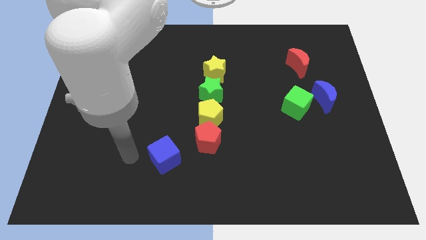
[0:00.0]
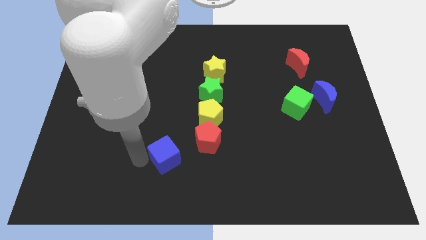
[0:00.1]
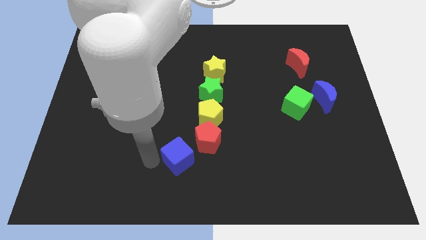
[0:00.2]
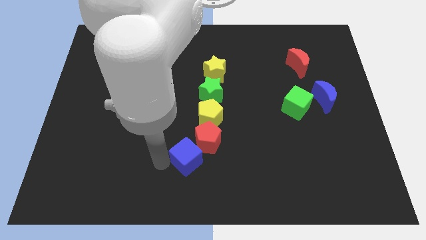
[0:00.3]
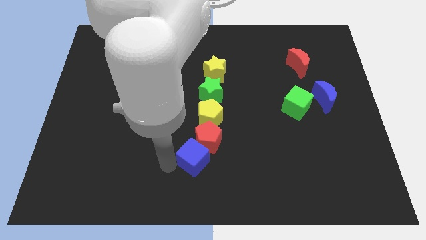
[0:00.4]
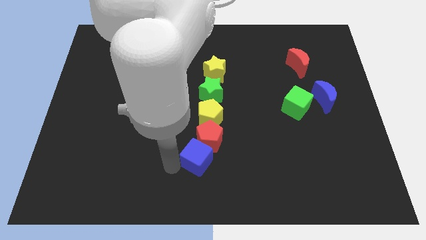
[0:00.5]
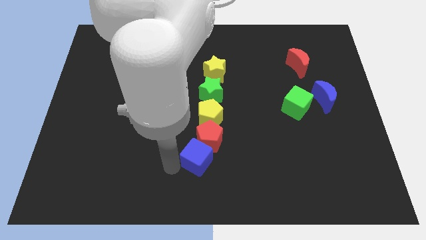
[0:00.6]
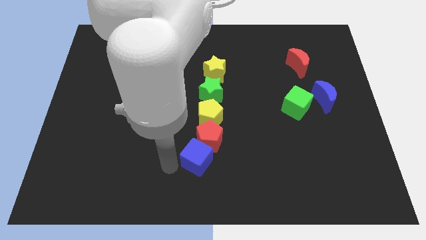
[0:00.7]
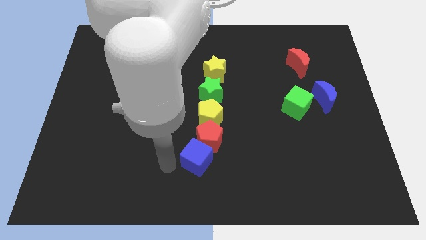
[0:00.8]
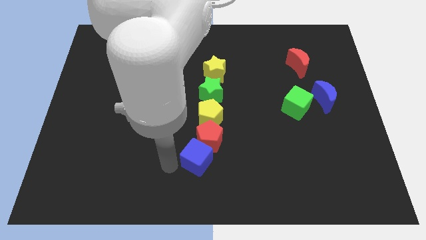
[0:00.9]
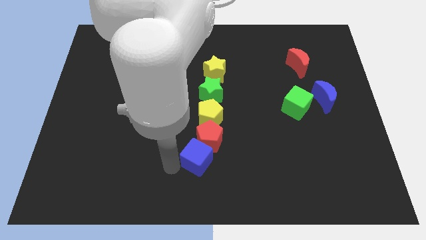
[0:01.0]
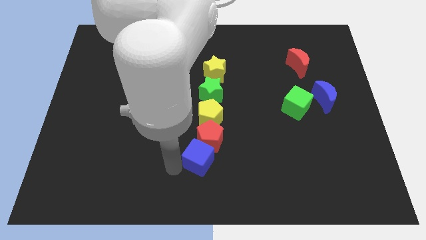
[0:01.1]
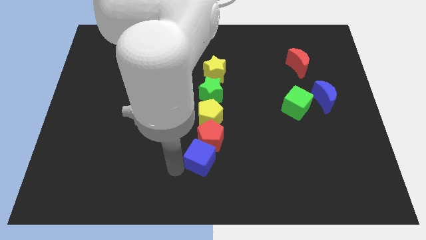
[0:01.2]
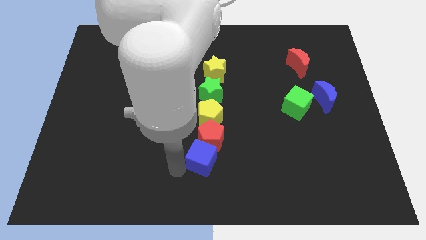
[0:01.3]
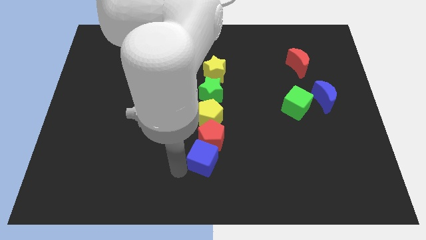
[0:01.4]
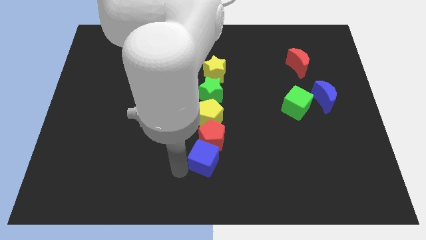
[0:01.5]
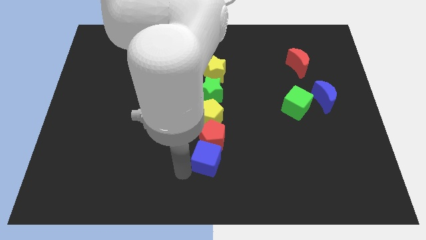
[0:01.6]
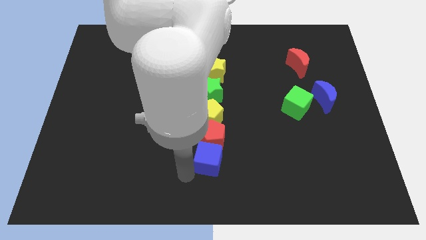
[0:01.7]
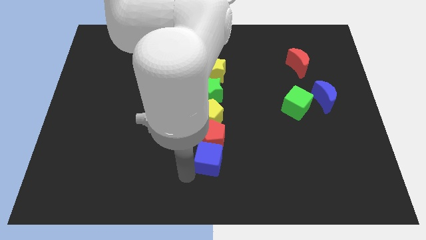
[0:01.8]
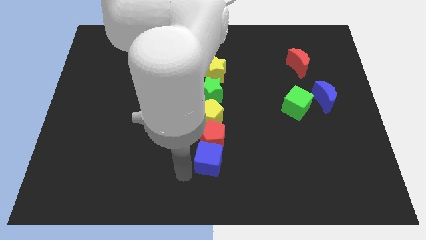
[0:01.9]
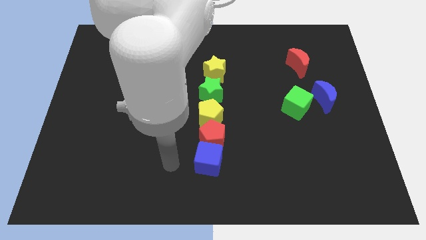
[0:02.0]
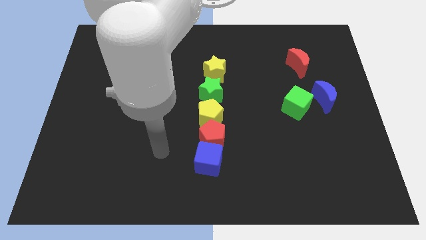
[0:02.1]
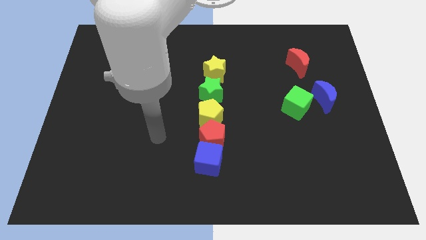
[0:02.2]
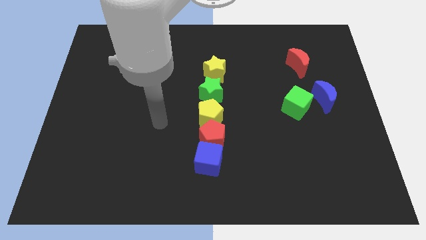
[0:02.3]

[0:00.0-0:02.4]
move the blue cube below the red pentagon

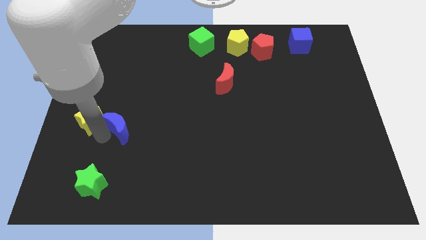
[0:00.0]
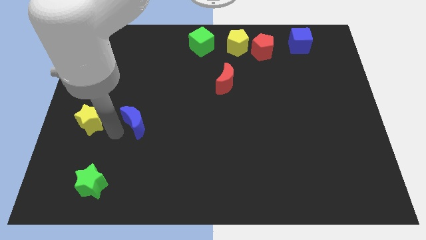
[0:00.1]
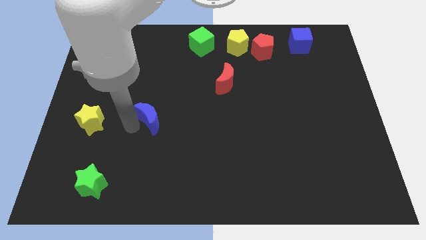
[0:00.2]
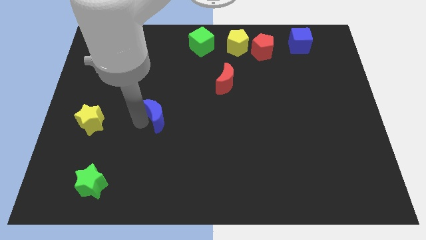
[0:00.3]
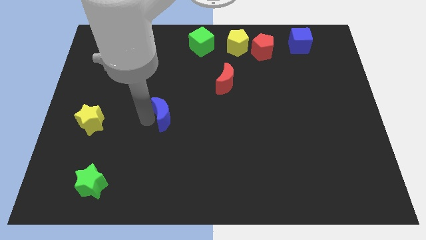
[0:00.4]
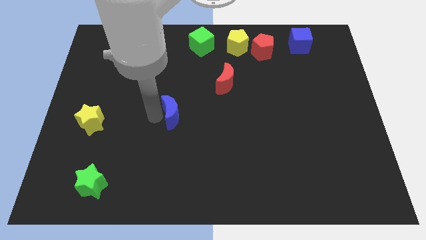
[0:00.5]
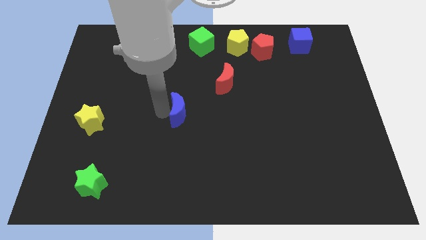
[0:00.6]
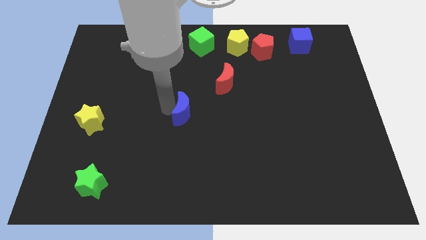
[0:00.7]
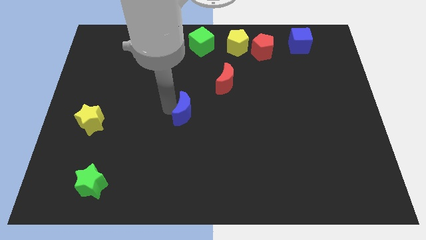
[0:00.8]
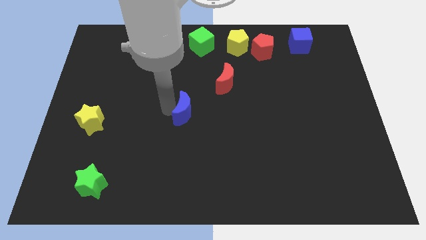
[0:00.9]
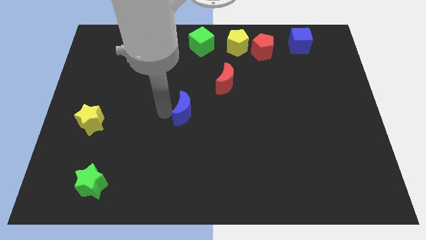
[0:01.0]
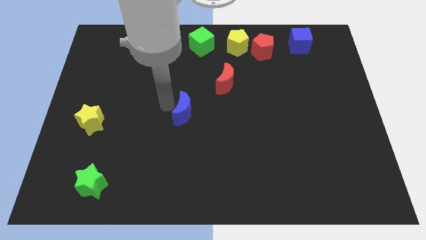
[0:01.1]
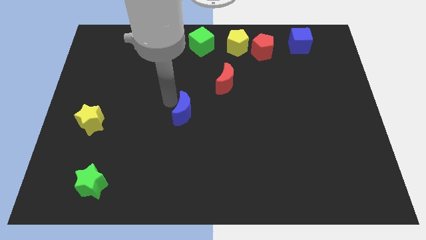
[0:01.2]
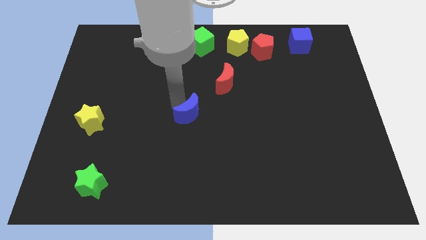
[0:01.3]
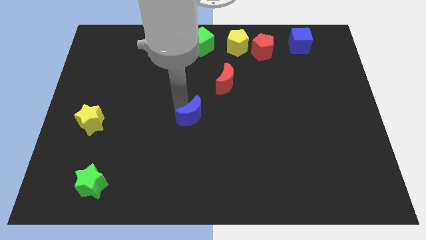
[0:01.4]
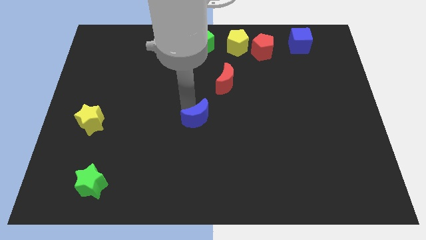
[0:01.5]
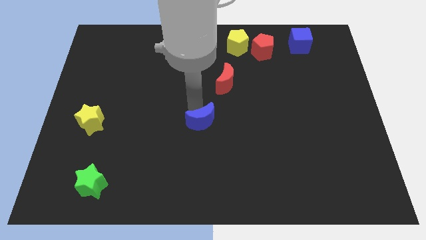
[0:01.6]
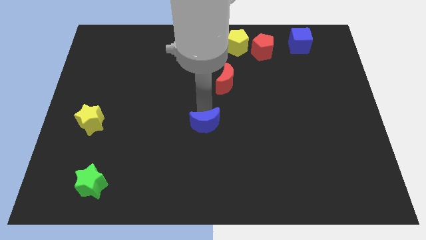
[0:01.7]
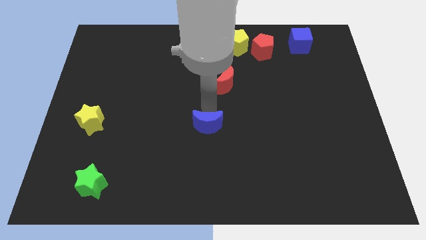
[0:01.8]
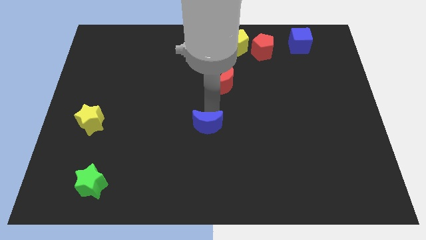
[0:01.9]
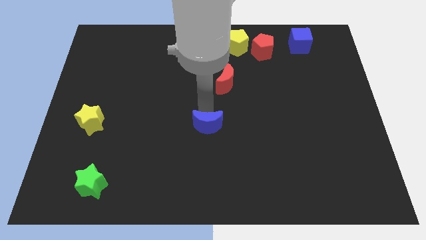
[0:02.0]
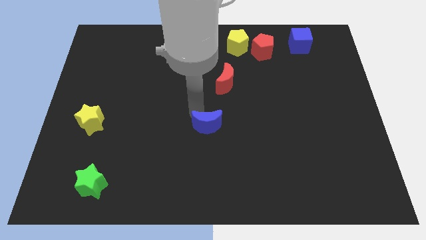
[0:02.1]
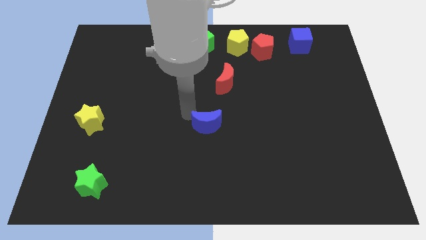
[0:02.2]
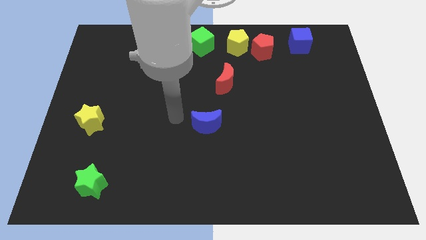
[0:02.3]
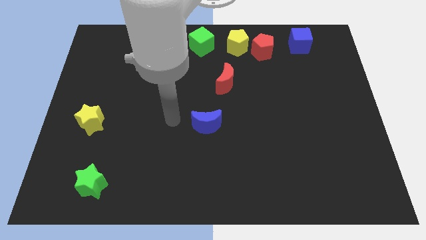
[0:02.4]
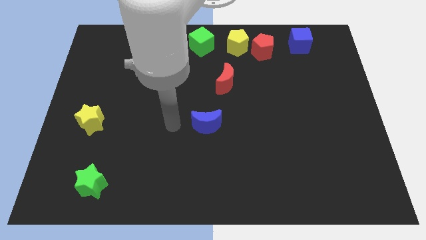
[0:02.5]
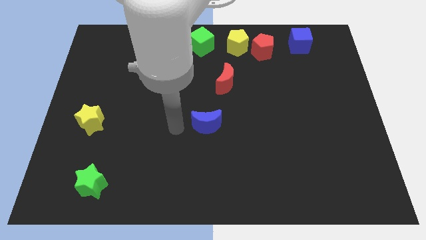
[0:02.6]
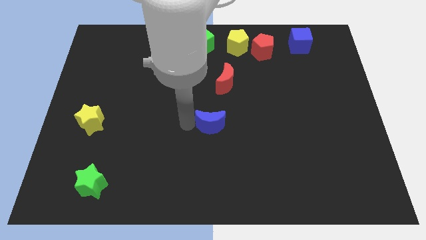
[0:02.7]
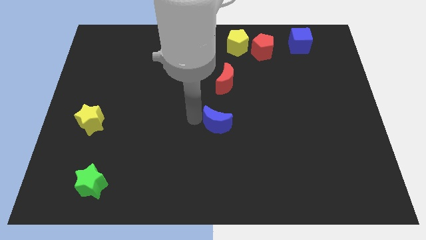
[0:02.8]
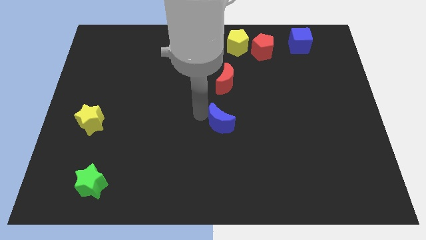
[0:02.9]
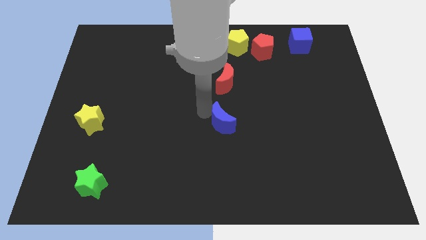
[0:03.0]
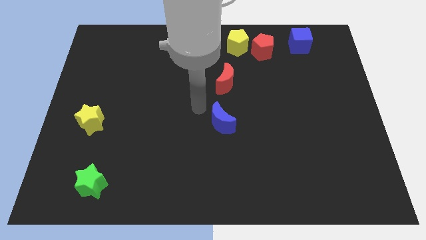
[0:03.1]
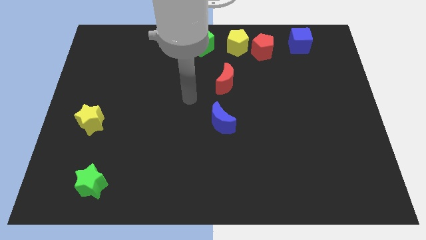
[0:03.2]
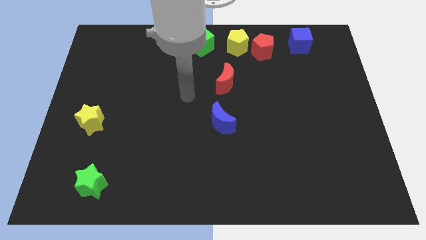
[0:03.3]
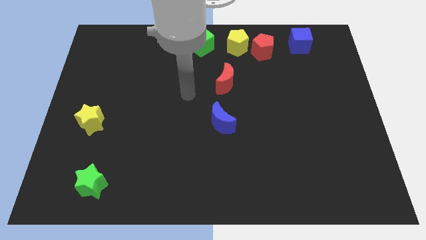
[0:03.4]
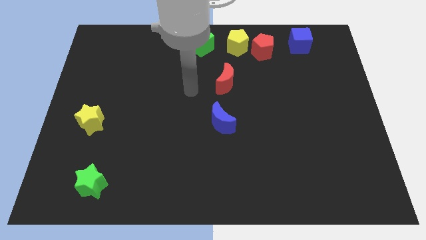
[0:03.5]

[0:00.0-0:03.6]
push the blue moon to the bottom side of the red moon

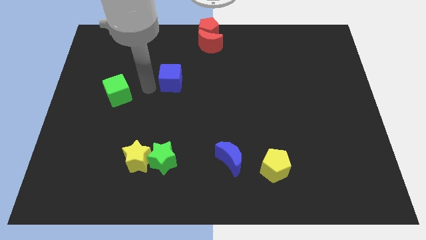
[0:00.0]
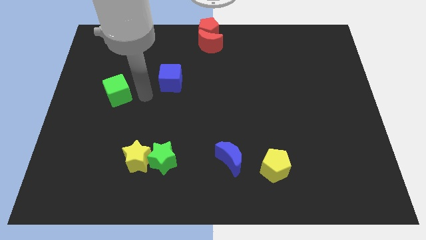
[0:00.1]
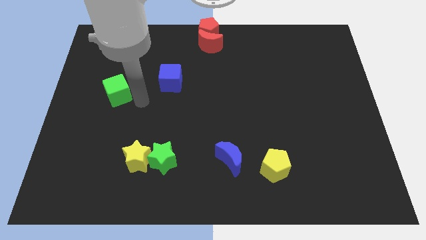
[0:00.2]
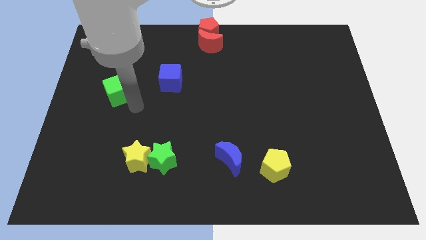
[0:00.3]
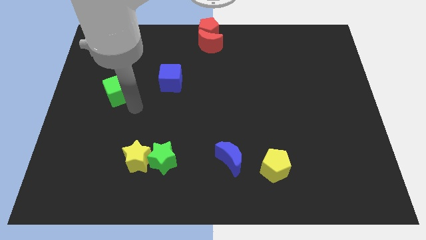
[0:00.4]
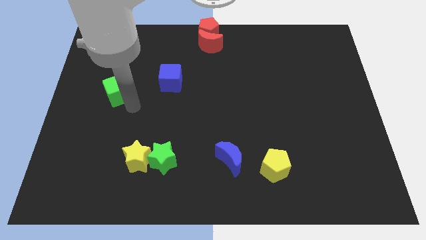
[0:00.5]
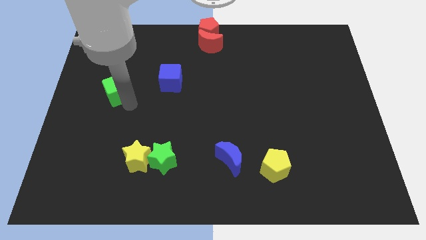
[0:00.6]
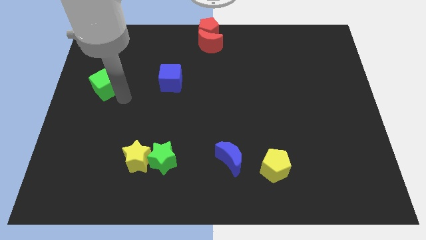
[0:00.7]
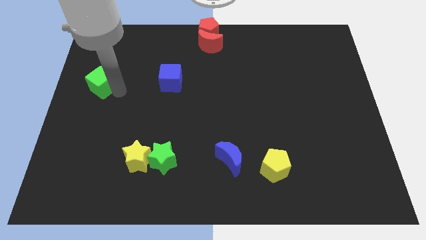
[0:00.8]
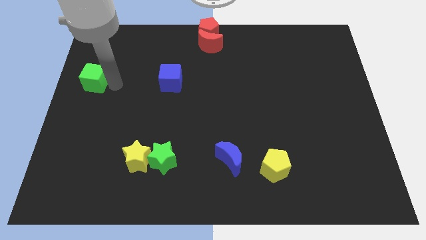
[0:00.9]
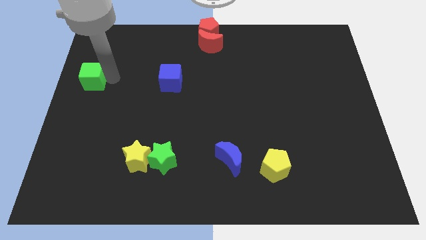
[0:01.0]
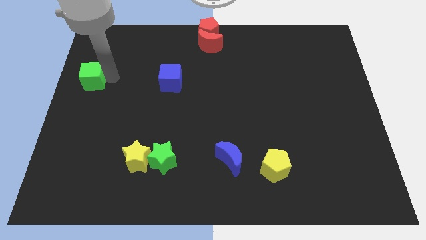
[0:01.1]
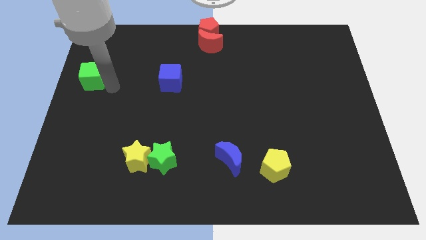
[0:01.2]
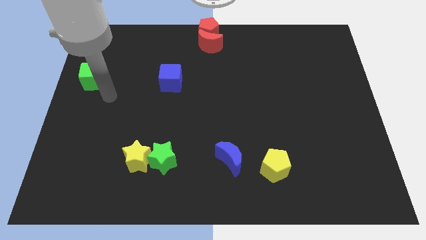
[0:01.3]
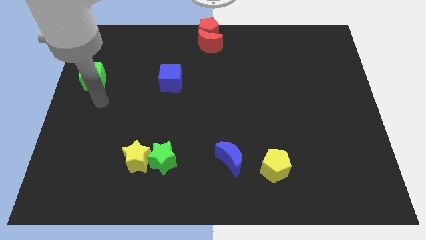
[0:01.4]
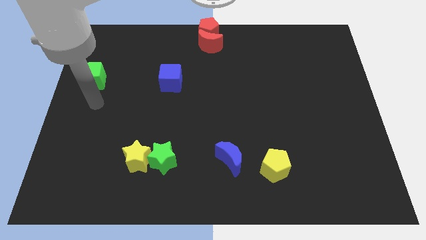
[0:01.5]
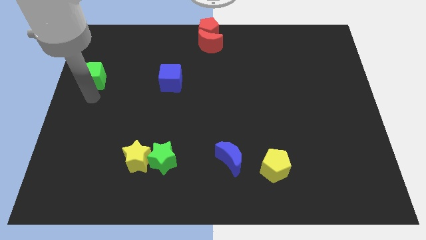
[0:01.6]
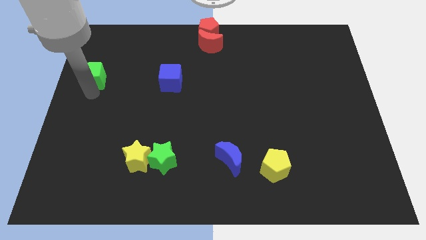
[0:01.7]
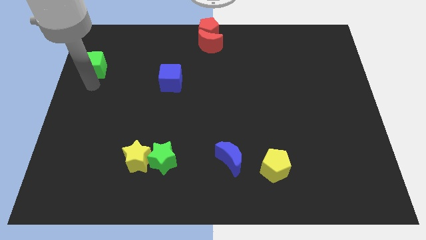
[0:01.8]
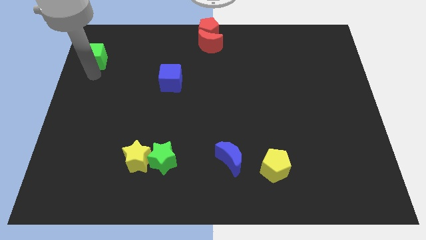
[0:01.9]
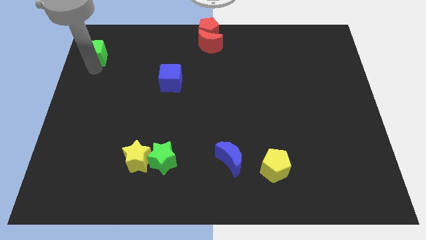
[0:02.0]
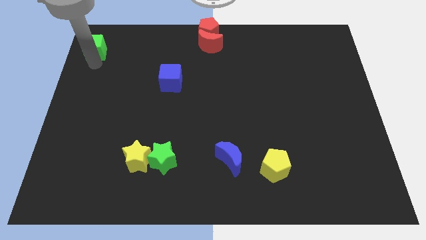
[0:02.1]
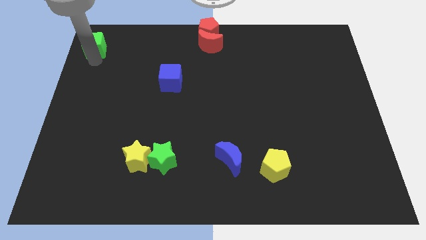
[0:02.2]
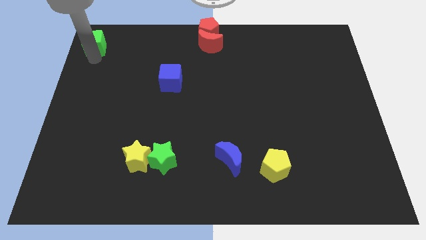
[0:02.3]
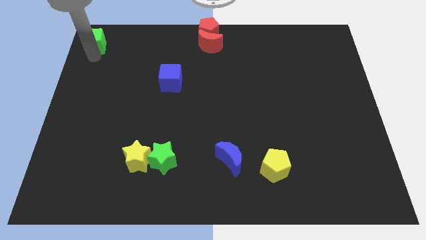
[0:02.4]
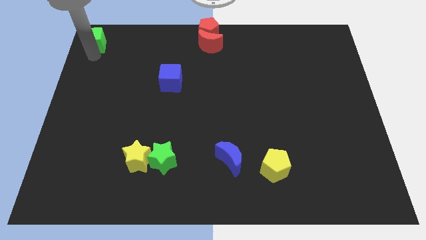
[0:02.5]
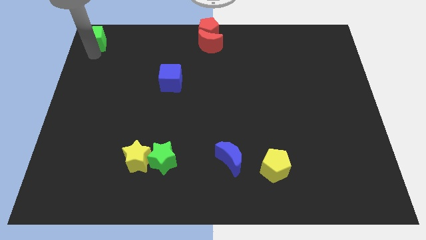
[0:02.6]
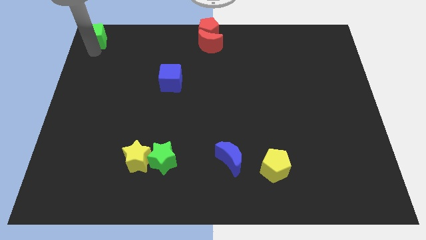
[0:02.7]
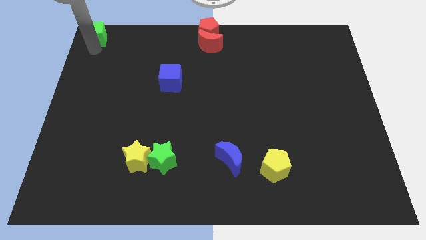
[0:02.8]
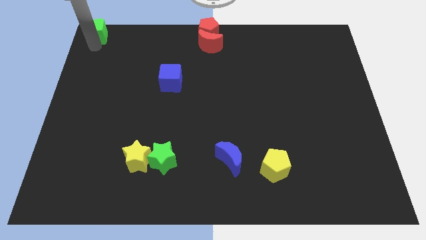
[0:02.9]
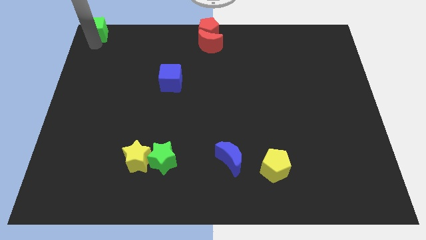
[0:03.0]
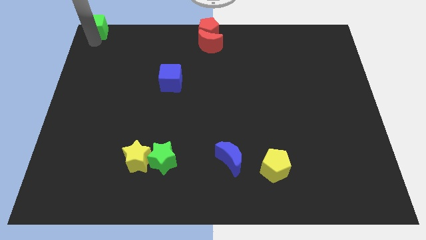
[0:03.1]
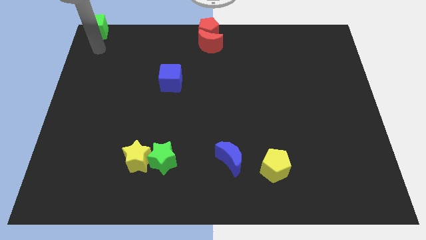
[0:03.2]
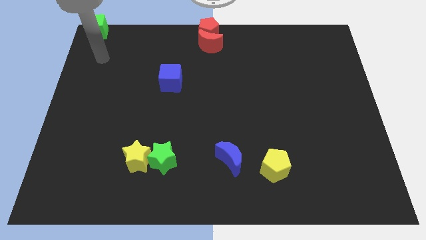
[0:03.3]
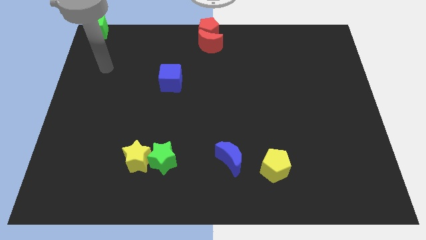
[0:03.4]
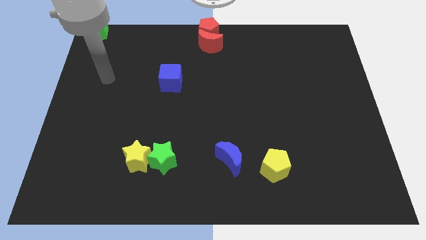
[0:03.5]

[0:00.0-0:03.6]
move green cube to top left corner
